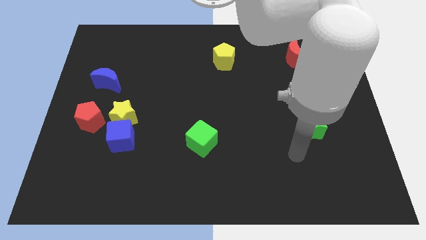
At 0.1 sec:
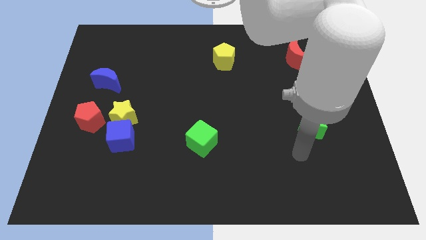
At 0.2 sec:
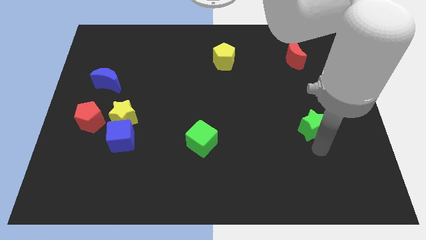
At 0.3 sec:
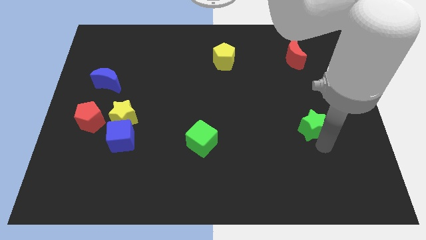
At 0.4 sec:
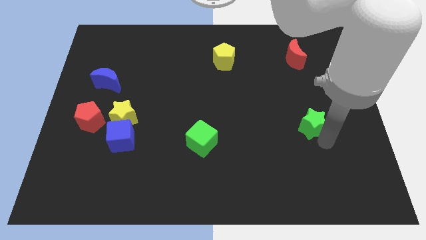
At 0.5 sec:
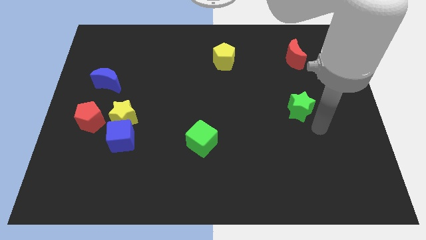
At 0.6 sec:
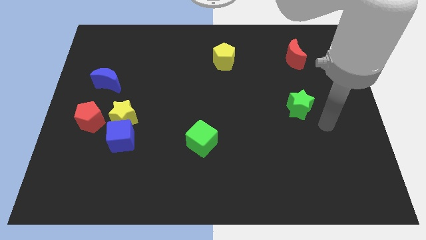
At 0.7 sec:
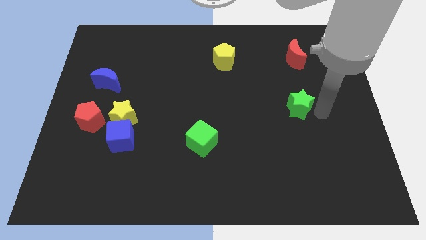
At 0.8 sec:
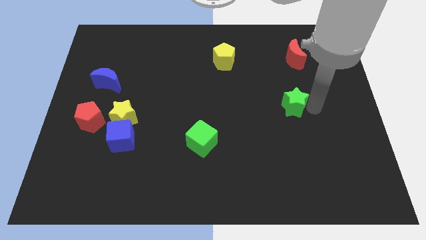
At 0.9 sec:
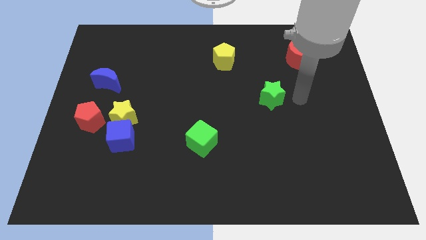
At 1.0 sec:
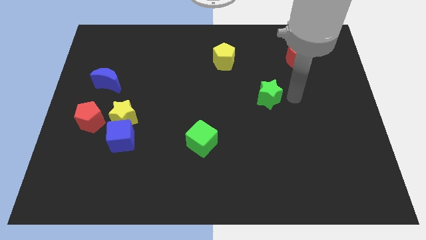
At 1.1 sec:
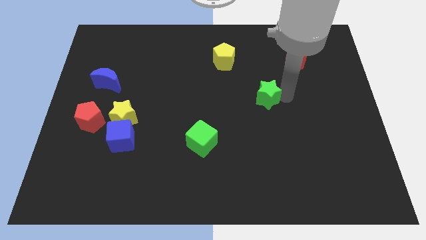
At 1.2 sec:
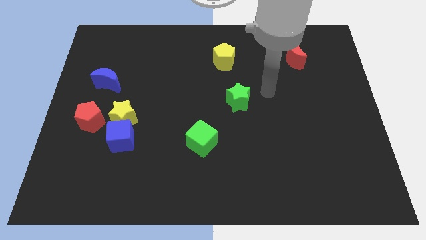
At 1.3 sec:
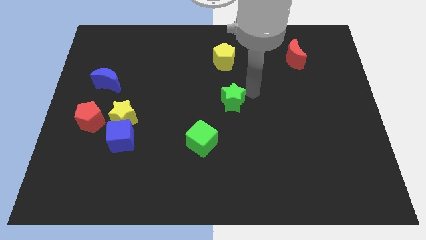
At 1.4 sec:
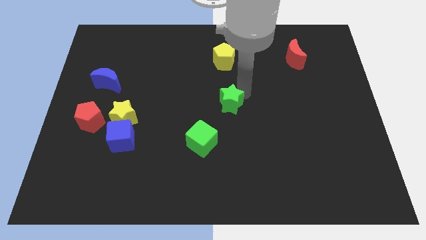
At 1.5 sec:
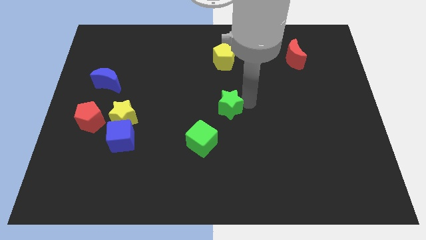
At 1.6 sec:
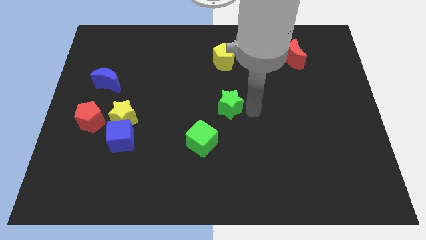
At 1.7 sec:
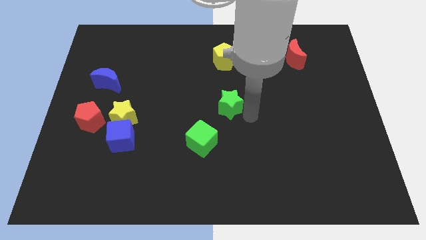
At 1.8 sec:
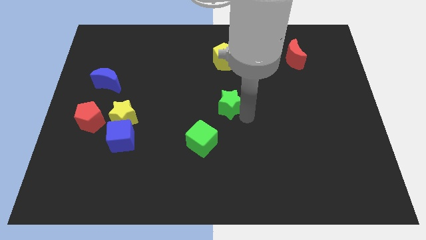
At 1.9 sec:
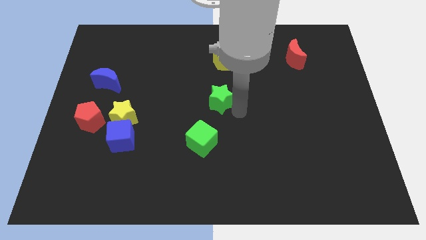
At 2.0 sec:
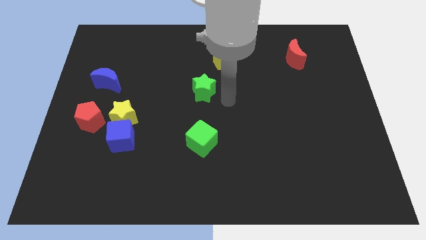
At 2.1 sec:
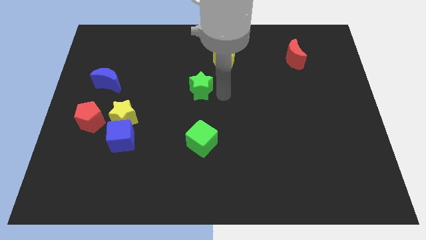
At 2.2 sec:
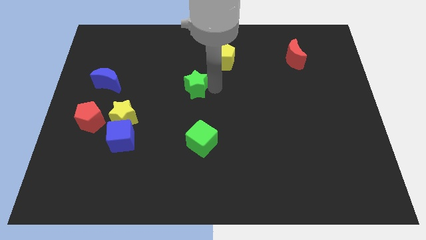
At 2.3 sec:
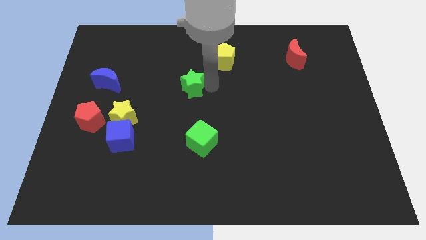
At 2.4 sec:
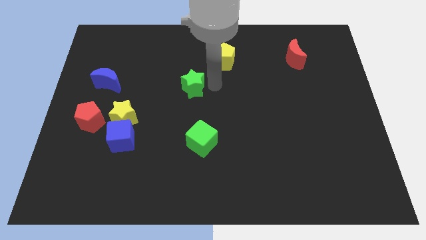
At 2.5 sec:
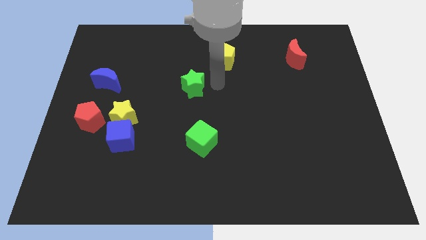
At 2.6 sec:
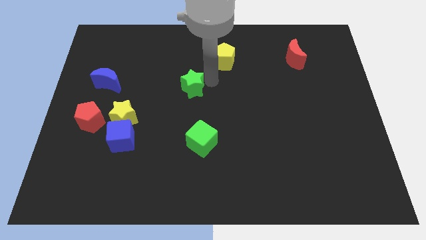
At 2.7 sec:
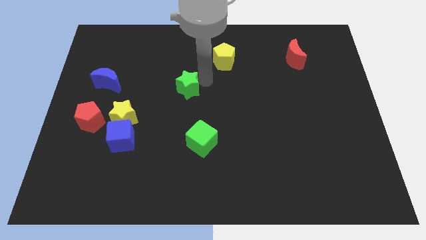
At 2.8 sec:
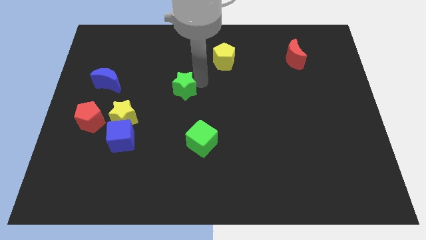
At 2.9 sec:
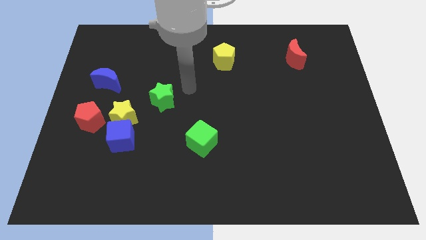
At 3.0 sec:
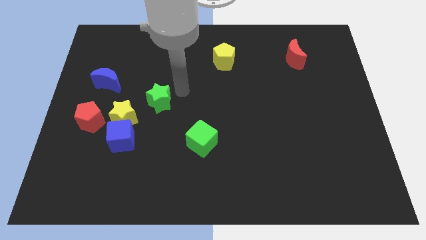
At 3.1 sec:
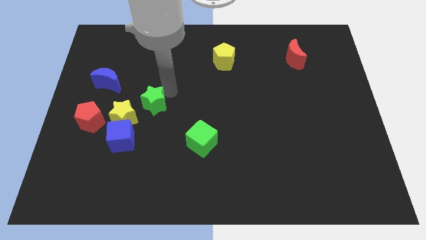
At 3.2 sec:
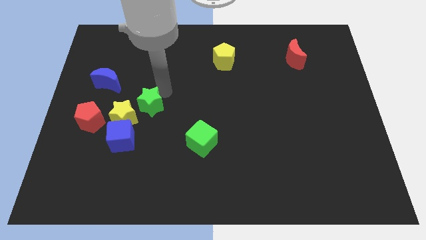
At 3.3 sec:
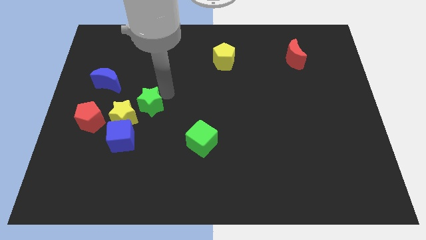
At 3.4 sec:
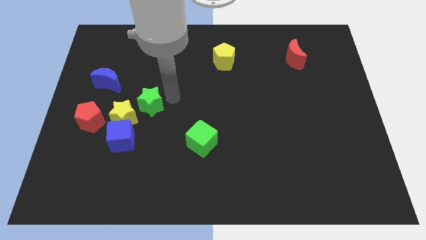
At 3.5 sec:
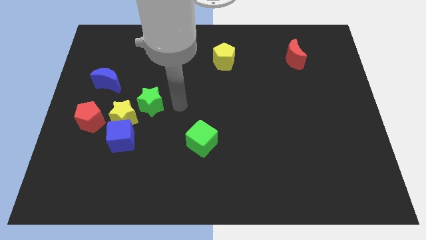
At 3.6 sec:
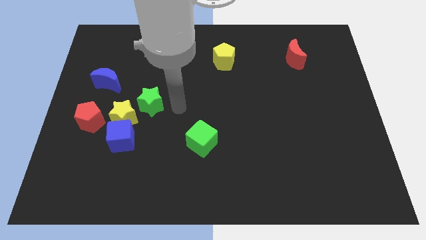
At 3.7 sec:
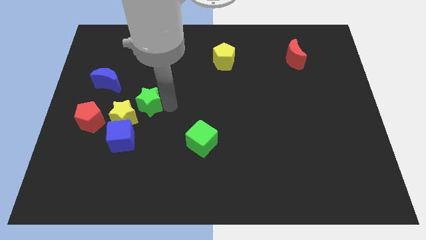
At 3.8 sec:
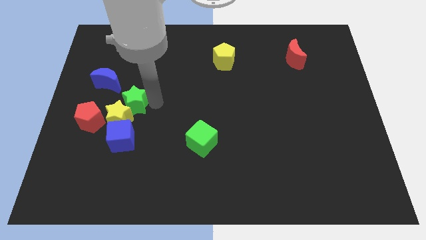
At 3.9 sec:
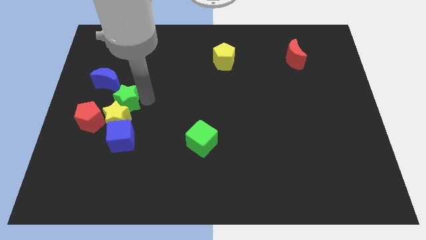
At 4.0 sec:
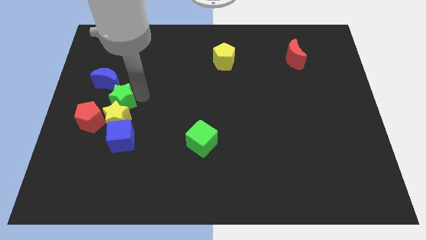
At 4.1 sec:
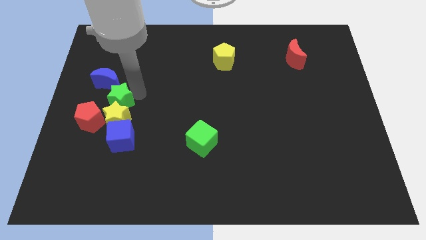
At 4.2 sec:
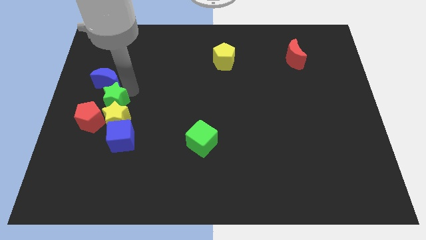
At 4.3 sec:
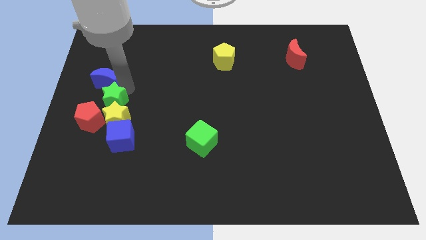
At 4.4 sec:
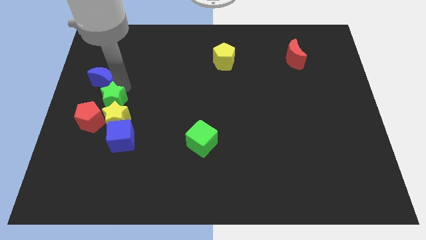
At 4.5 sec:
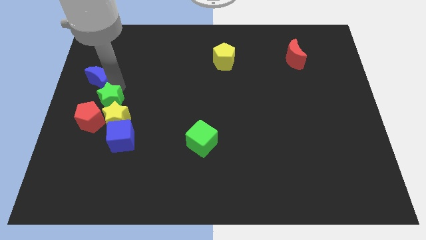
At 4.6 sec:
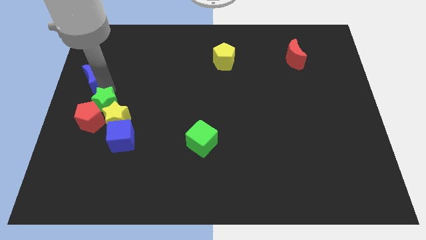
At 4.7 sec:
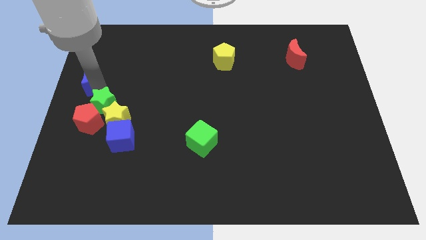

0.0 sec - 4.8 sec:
push the green star to the red pentagon

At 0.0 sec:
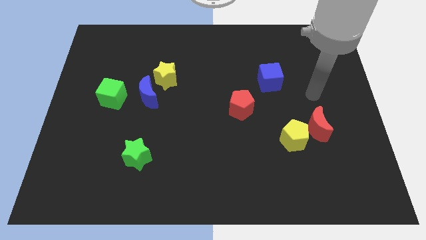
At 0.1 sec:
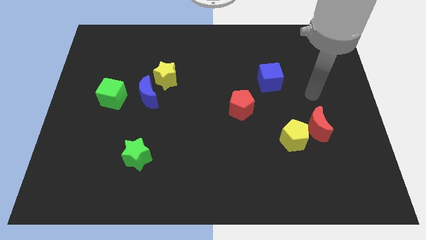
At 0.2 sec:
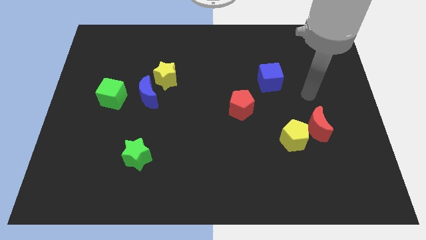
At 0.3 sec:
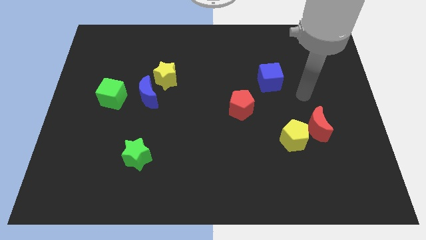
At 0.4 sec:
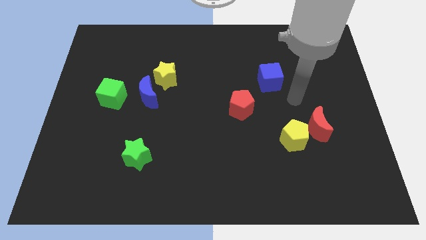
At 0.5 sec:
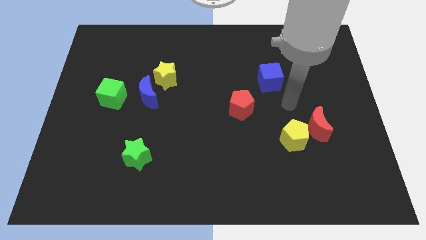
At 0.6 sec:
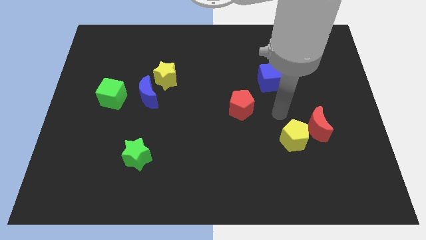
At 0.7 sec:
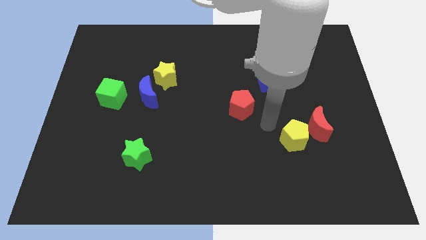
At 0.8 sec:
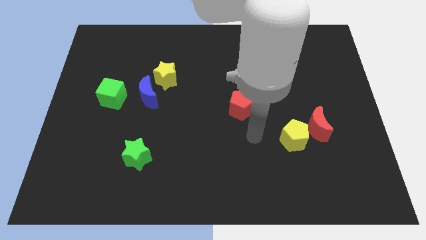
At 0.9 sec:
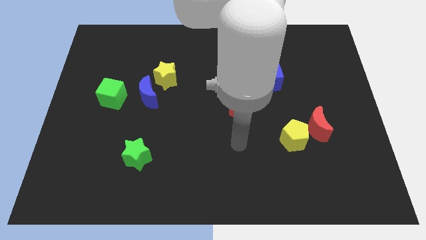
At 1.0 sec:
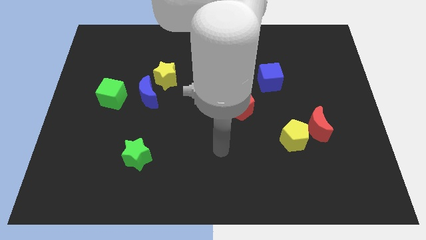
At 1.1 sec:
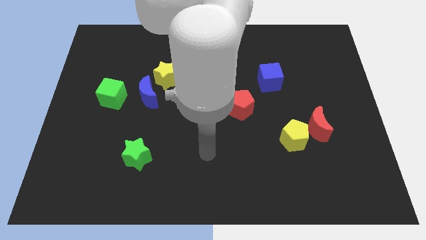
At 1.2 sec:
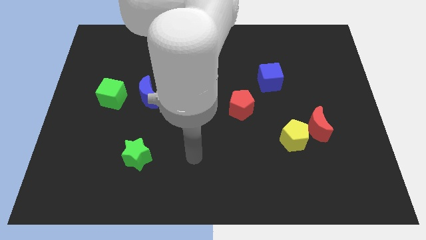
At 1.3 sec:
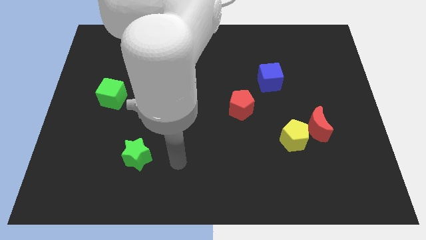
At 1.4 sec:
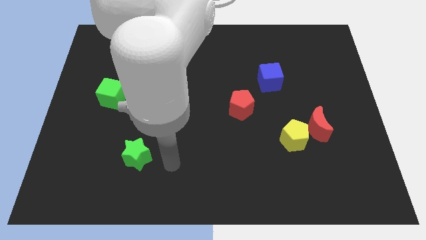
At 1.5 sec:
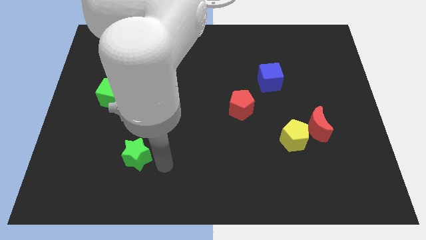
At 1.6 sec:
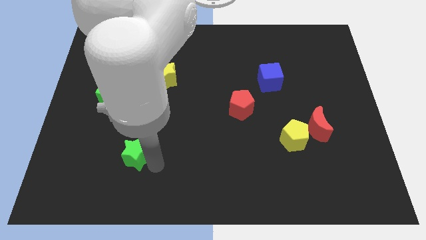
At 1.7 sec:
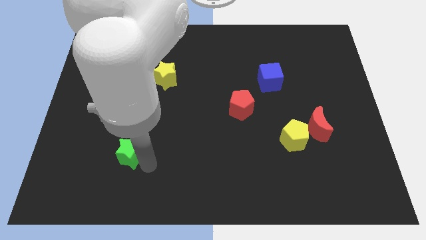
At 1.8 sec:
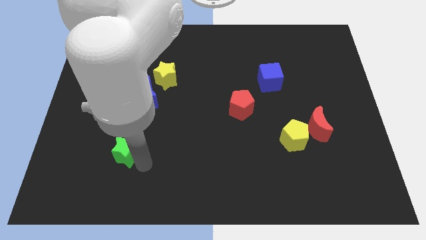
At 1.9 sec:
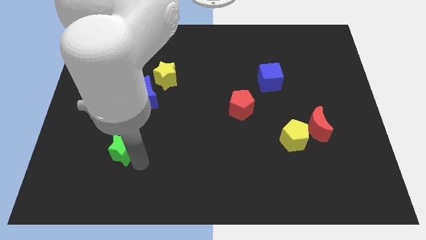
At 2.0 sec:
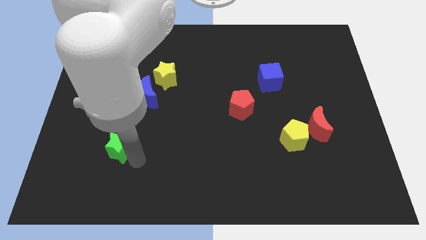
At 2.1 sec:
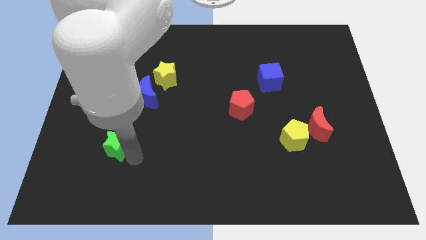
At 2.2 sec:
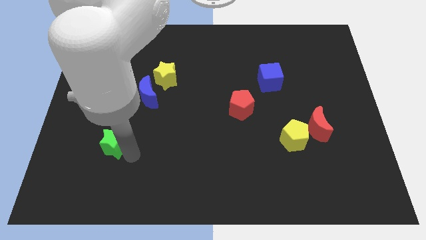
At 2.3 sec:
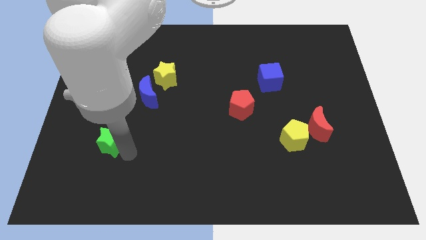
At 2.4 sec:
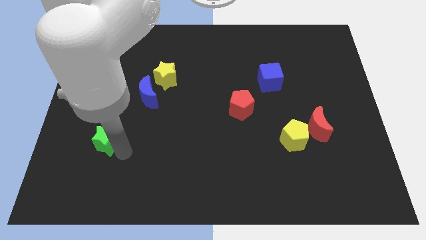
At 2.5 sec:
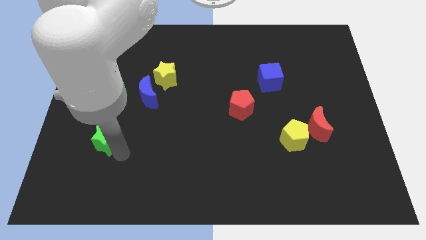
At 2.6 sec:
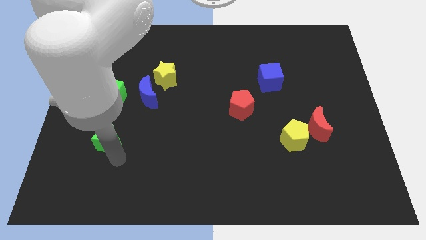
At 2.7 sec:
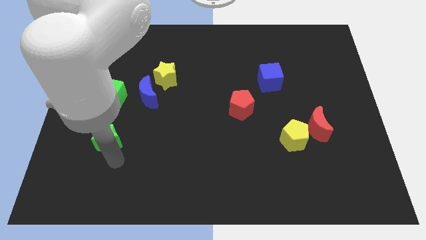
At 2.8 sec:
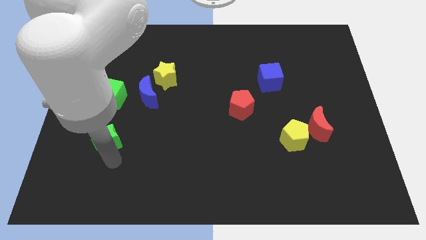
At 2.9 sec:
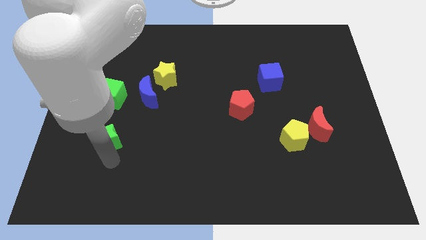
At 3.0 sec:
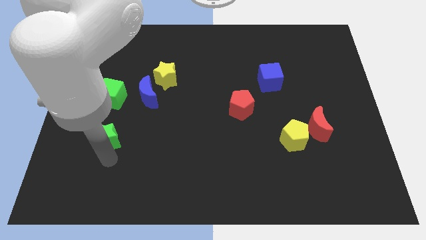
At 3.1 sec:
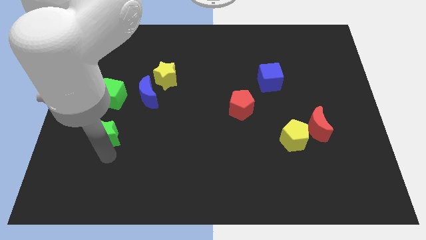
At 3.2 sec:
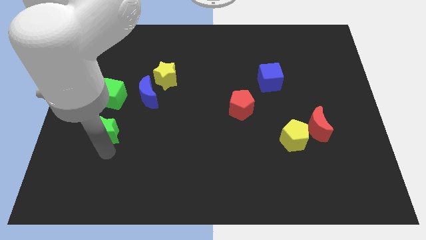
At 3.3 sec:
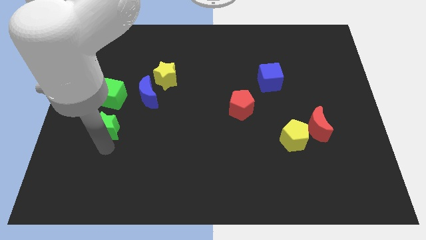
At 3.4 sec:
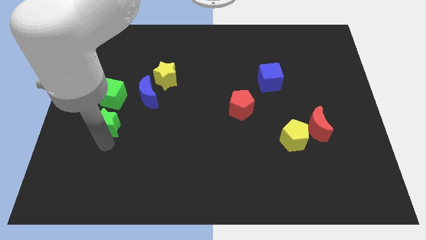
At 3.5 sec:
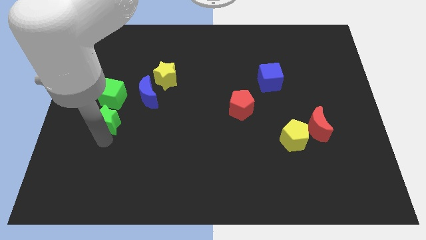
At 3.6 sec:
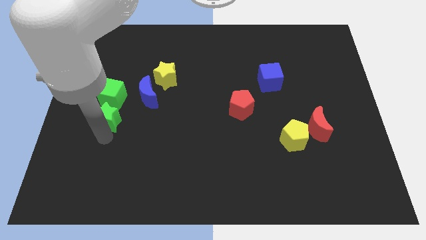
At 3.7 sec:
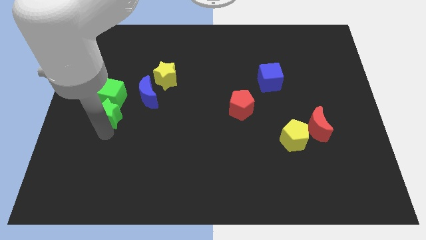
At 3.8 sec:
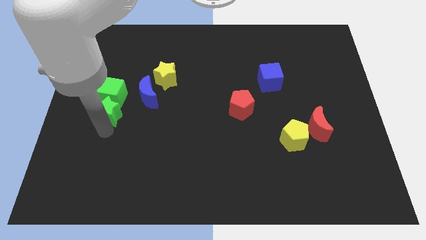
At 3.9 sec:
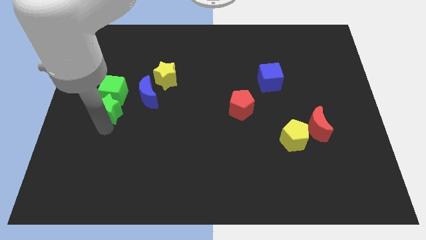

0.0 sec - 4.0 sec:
put the green star to the green cube

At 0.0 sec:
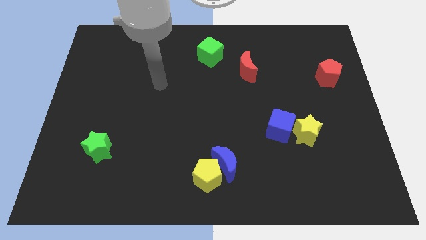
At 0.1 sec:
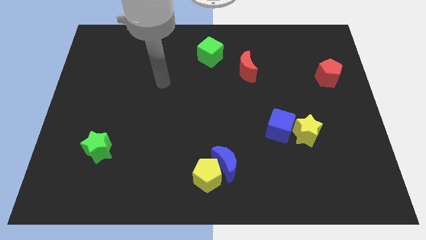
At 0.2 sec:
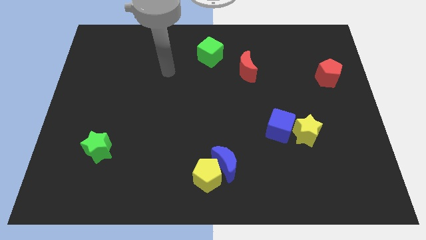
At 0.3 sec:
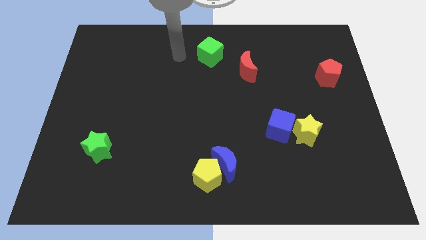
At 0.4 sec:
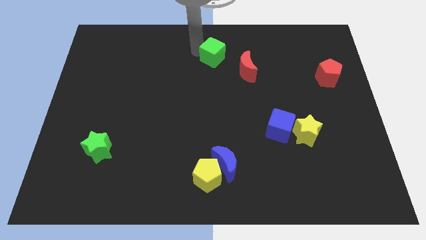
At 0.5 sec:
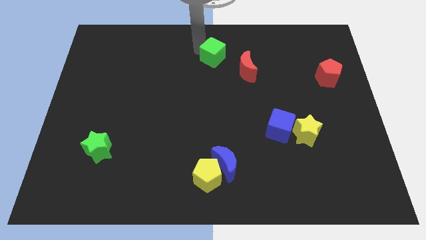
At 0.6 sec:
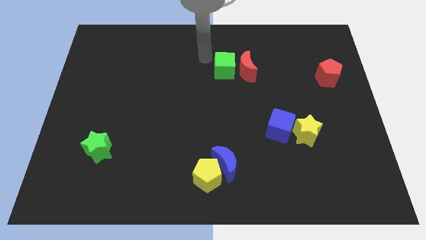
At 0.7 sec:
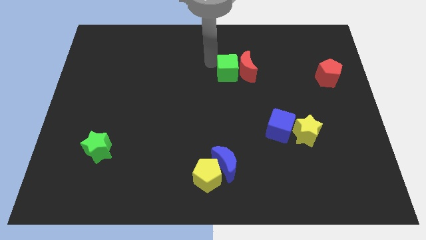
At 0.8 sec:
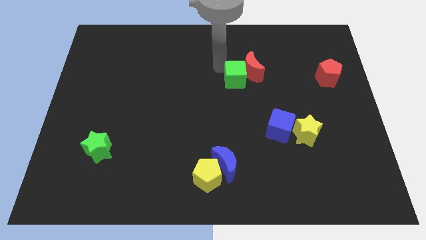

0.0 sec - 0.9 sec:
push the green cube towards the red moon
